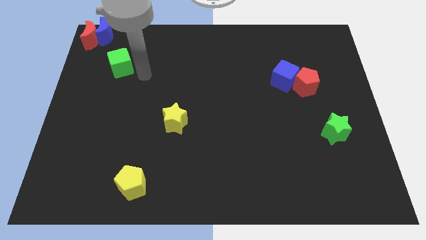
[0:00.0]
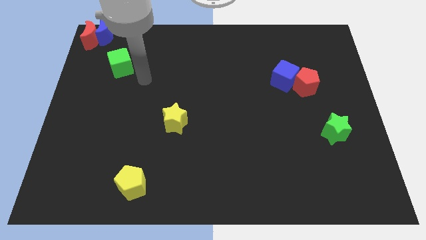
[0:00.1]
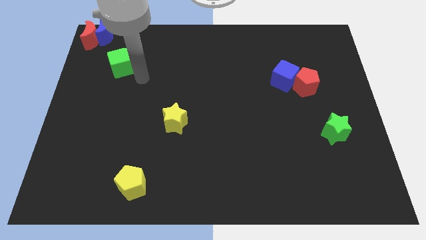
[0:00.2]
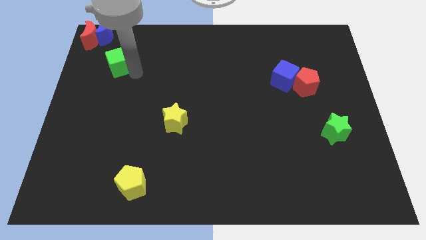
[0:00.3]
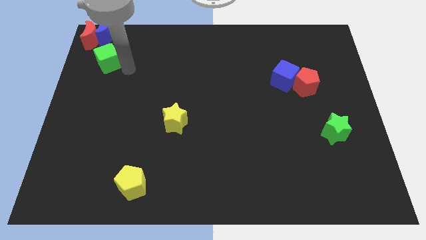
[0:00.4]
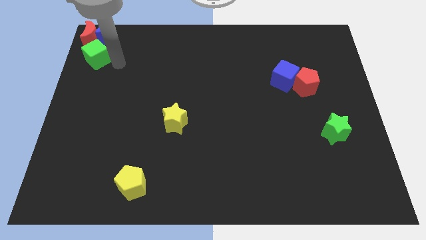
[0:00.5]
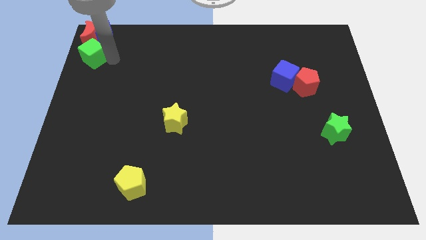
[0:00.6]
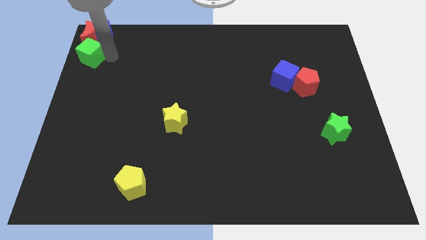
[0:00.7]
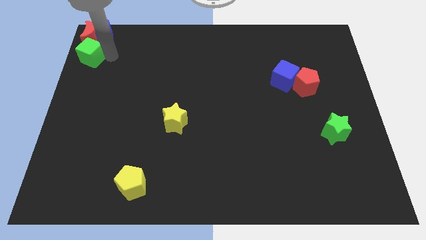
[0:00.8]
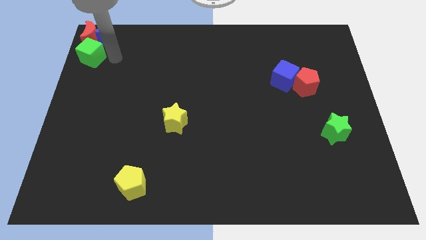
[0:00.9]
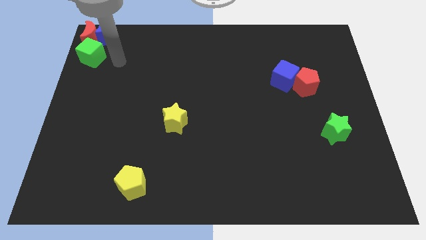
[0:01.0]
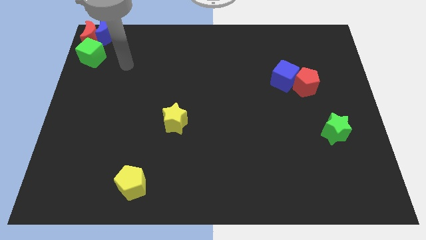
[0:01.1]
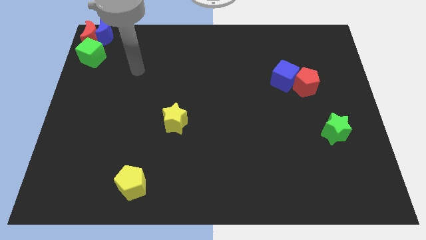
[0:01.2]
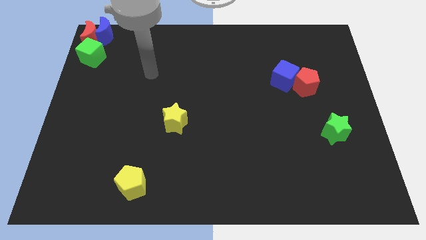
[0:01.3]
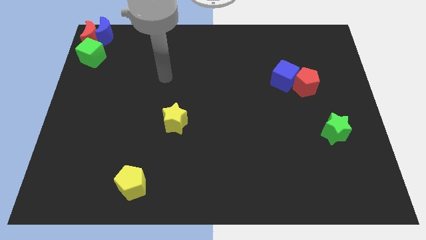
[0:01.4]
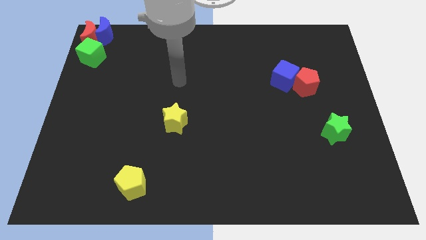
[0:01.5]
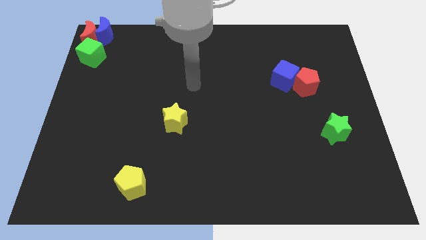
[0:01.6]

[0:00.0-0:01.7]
place the green cube below crescents

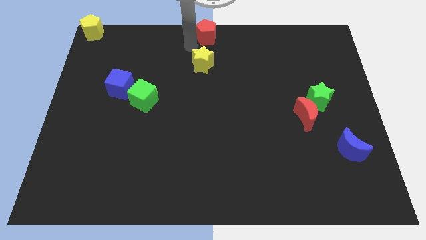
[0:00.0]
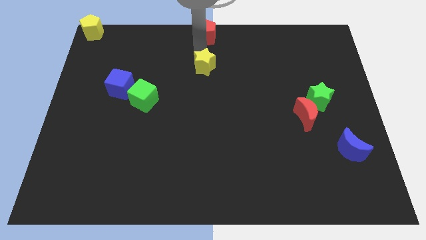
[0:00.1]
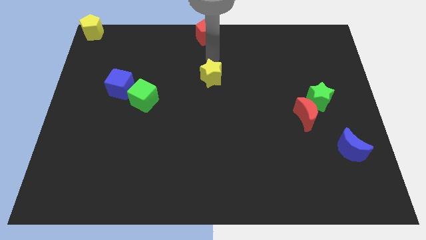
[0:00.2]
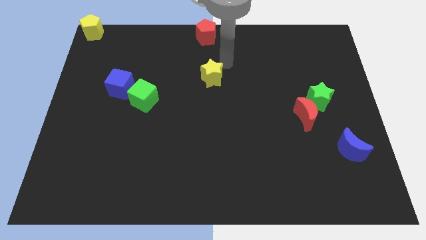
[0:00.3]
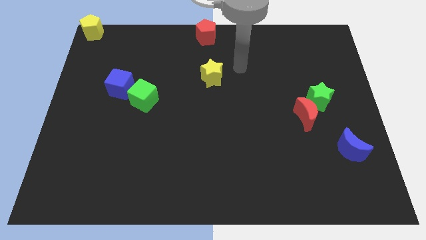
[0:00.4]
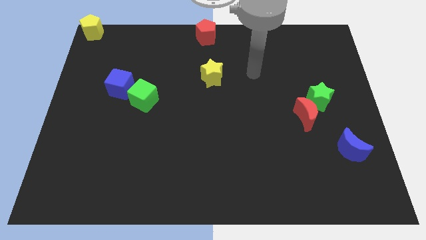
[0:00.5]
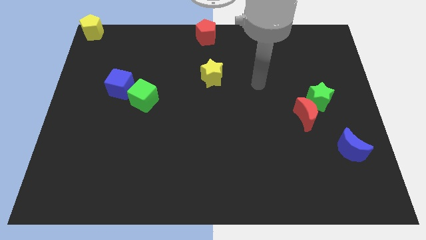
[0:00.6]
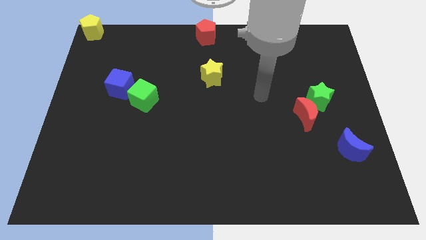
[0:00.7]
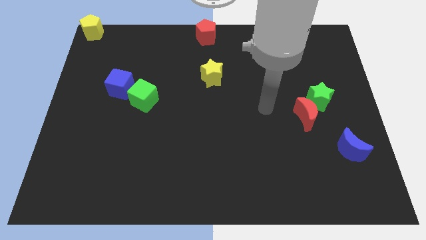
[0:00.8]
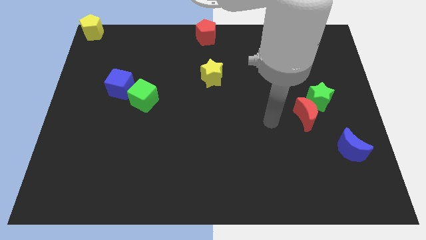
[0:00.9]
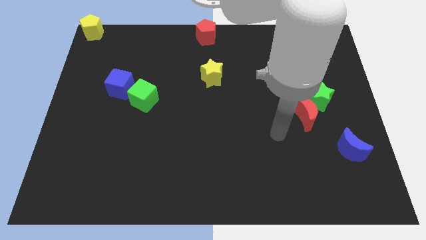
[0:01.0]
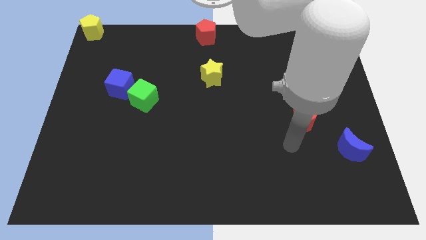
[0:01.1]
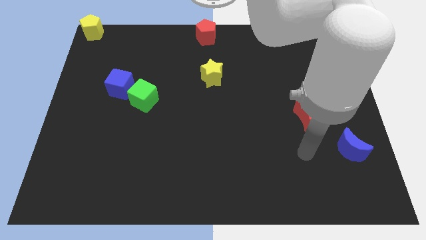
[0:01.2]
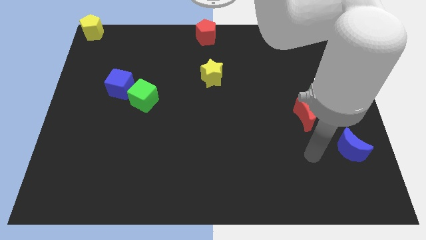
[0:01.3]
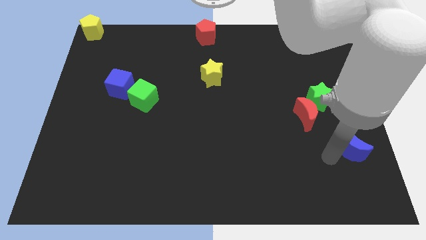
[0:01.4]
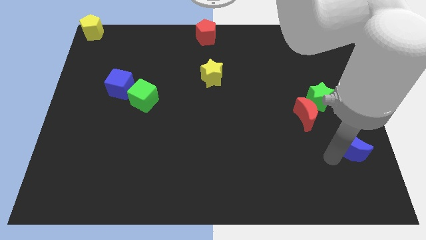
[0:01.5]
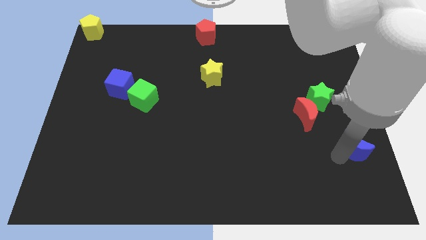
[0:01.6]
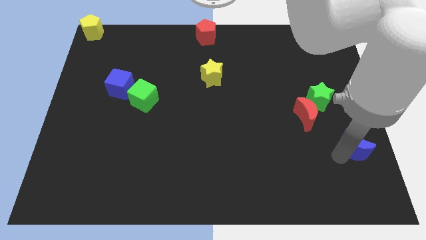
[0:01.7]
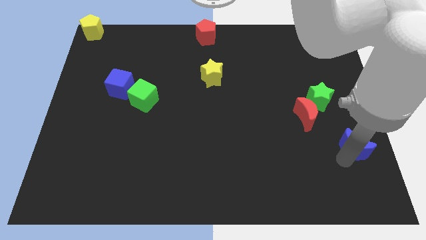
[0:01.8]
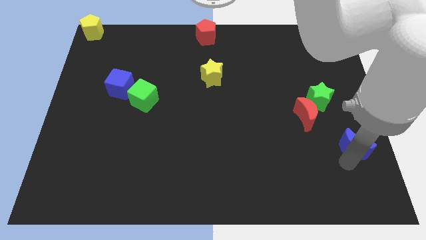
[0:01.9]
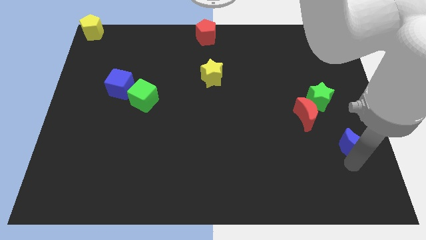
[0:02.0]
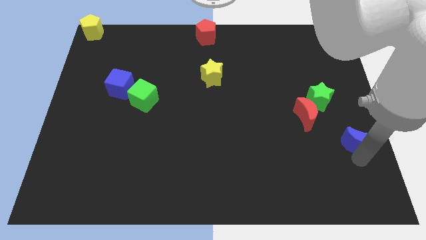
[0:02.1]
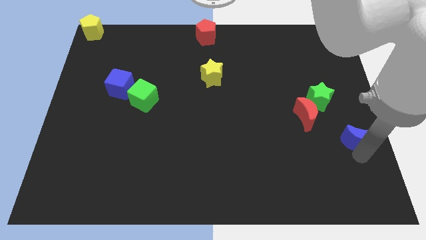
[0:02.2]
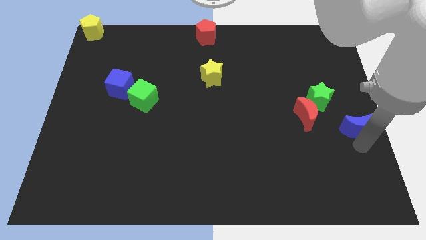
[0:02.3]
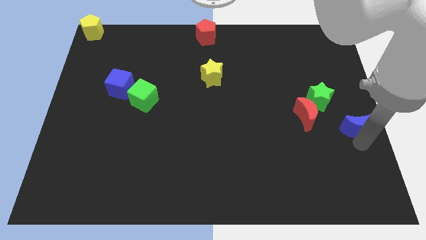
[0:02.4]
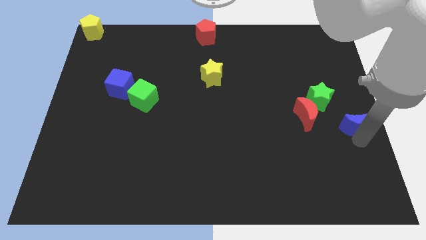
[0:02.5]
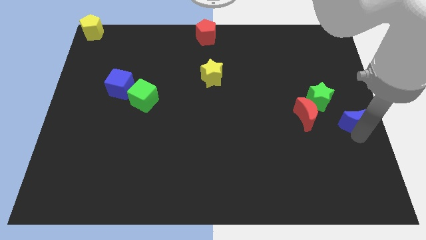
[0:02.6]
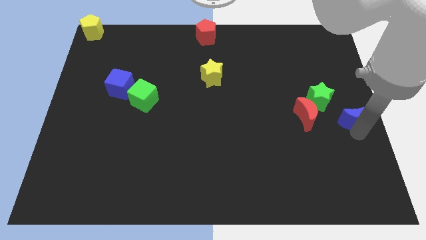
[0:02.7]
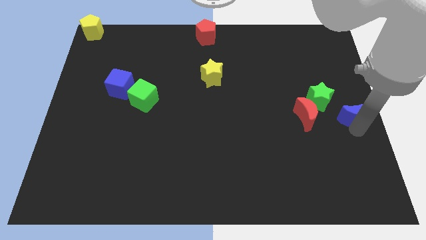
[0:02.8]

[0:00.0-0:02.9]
place blue moon to the right of red moon

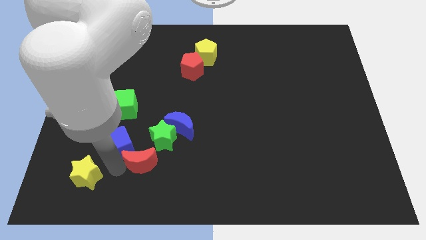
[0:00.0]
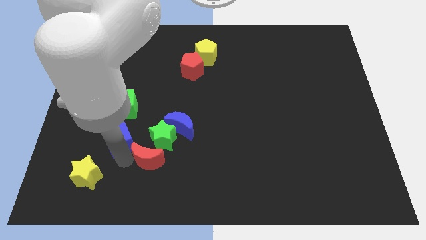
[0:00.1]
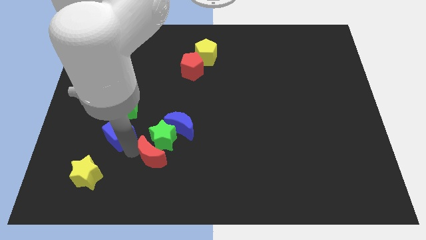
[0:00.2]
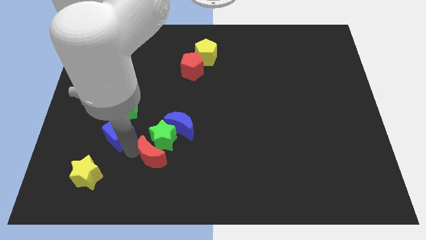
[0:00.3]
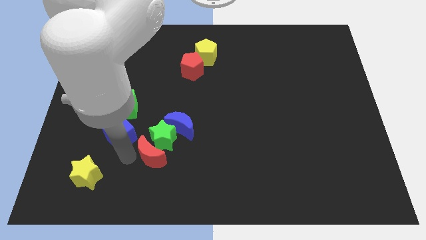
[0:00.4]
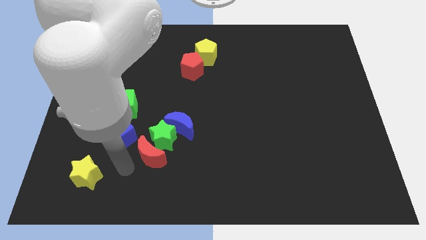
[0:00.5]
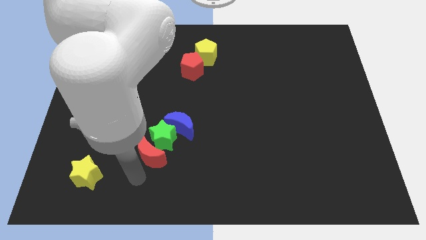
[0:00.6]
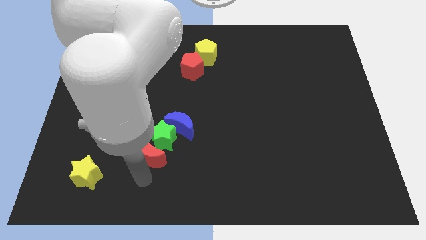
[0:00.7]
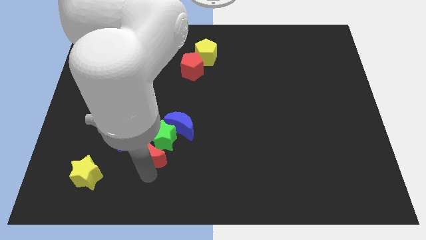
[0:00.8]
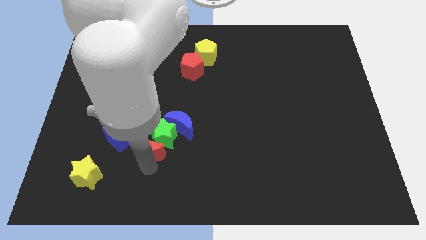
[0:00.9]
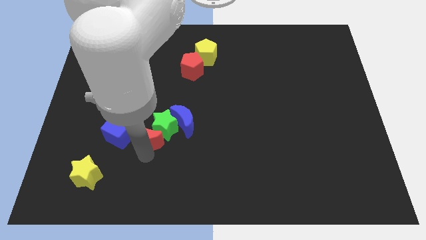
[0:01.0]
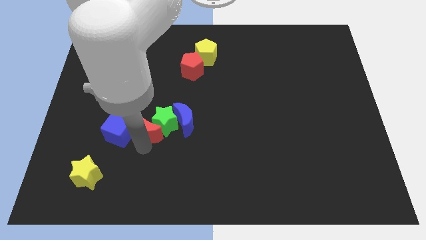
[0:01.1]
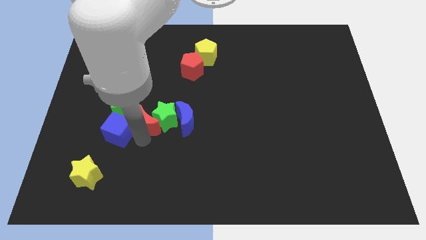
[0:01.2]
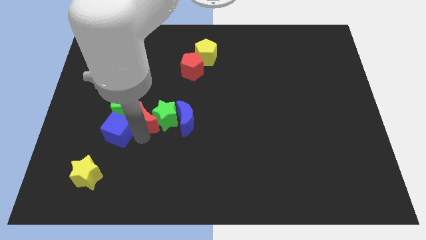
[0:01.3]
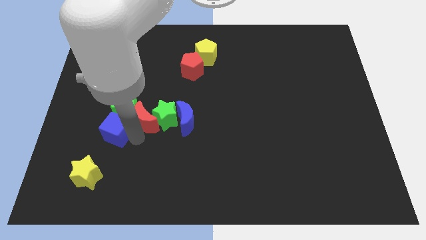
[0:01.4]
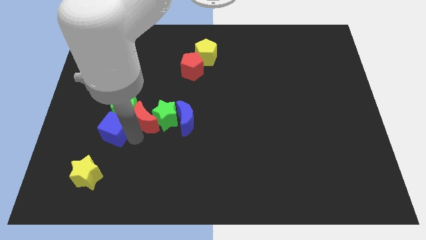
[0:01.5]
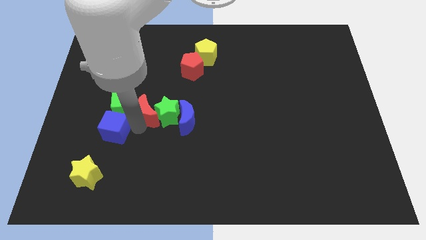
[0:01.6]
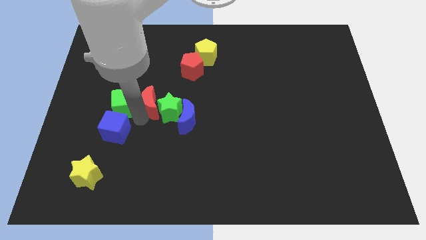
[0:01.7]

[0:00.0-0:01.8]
separate the red moon towards left of green star

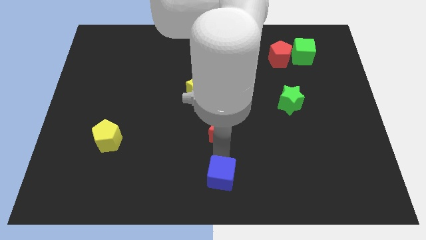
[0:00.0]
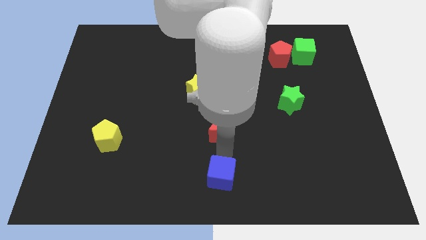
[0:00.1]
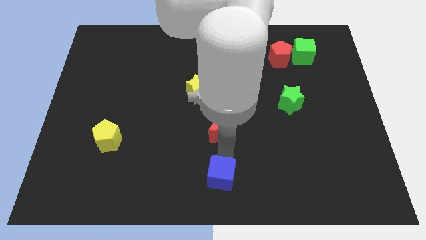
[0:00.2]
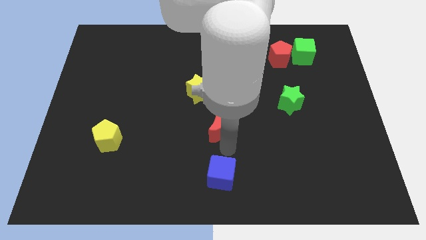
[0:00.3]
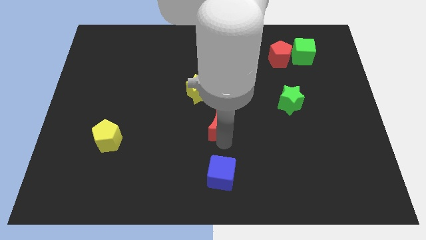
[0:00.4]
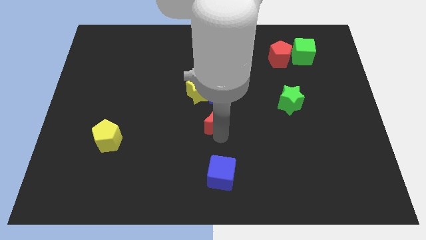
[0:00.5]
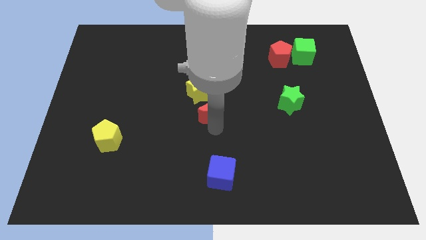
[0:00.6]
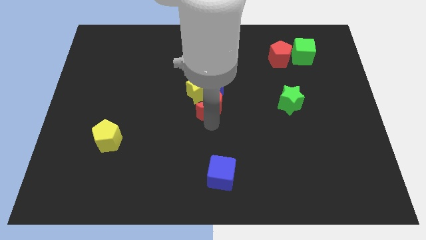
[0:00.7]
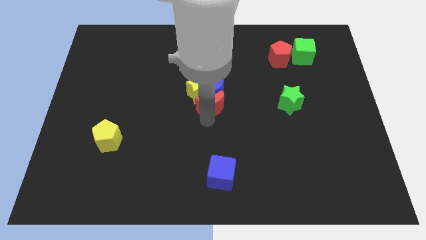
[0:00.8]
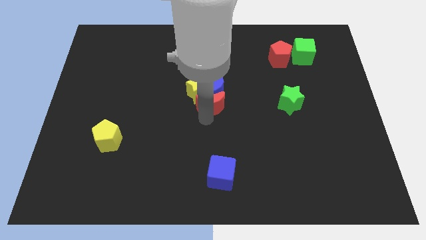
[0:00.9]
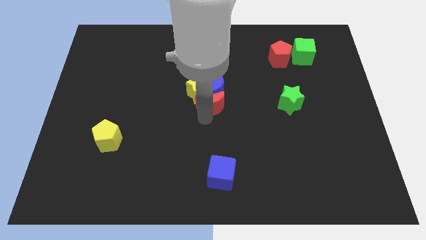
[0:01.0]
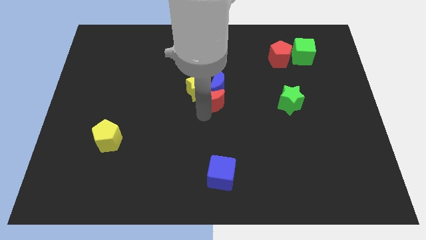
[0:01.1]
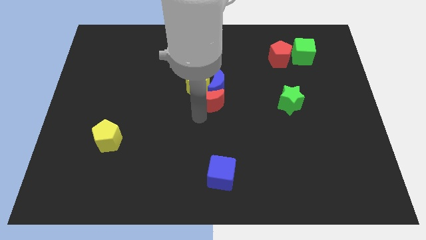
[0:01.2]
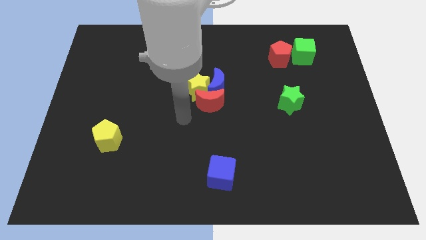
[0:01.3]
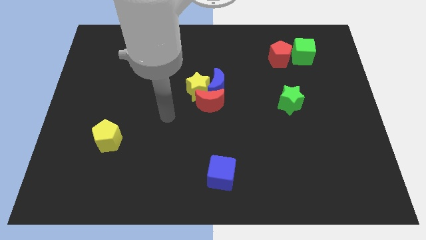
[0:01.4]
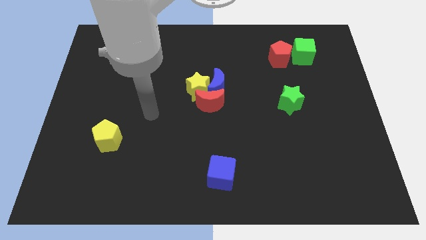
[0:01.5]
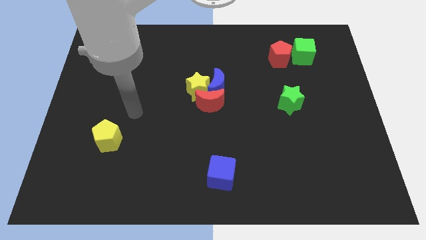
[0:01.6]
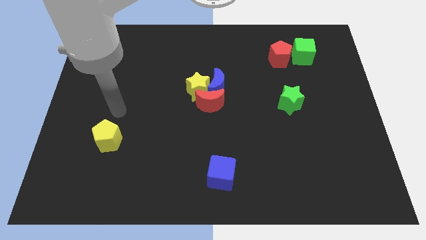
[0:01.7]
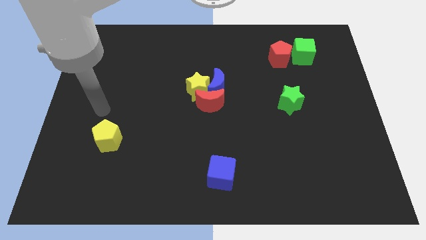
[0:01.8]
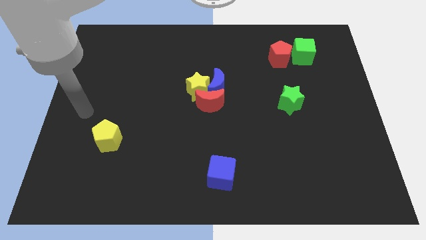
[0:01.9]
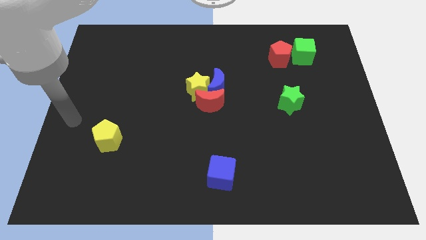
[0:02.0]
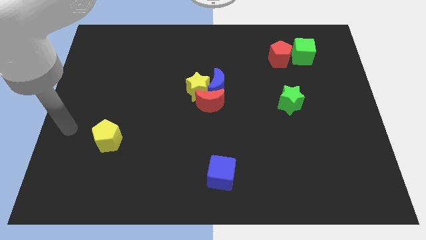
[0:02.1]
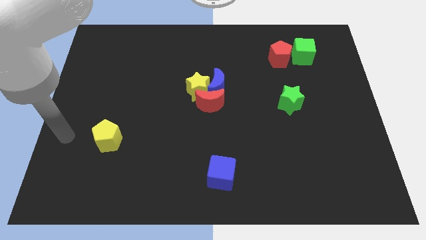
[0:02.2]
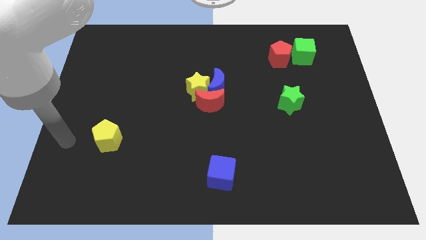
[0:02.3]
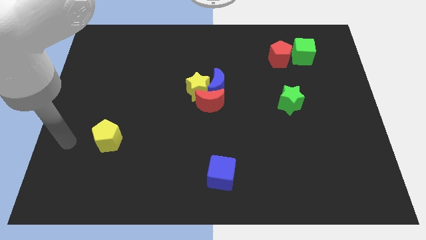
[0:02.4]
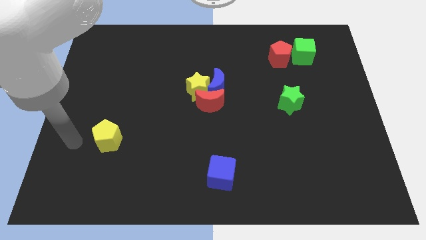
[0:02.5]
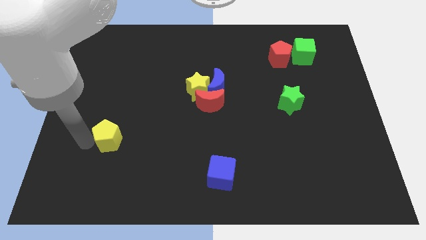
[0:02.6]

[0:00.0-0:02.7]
push the red moon into the bottom of the yellow star and blue crescent
